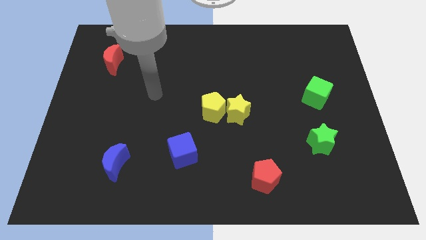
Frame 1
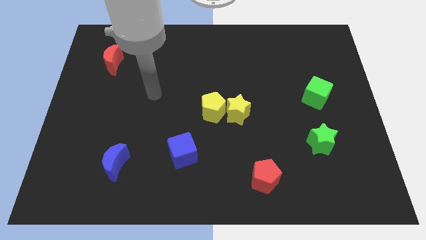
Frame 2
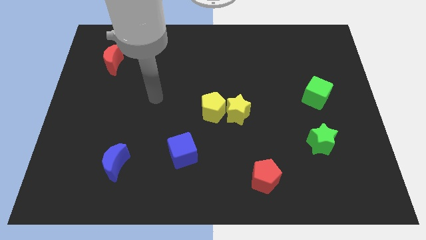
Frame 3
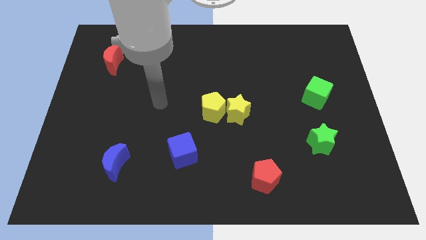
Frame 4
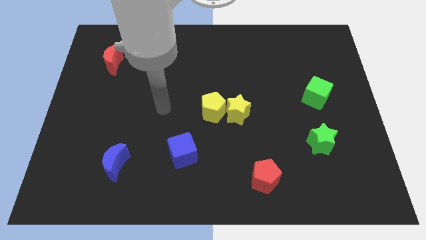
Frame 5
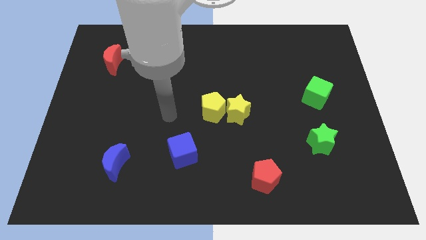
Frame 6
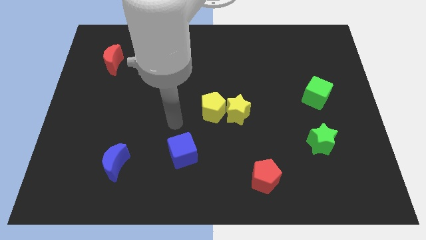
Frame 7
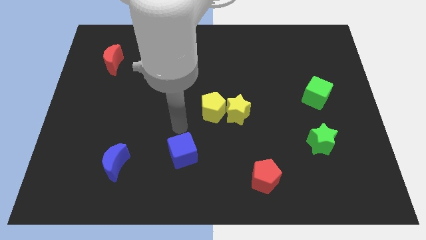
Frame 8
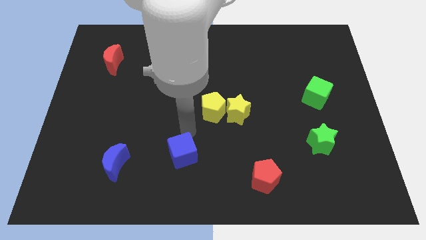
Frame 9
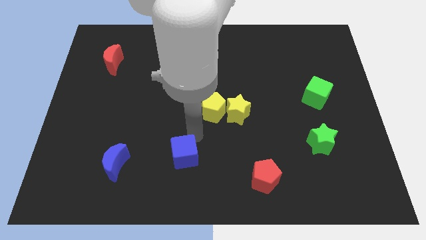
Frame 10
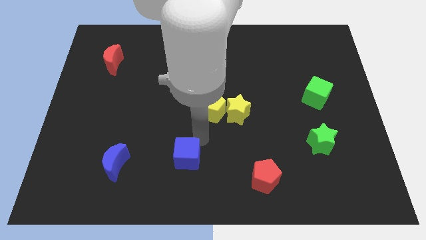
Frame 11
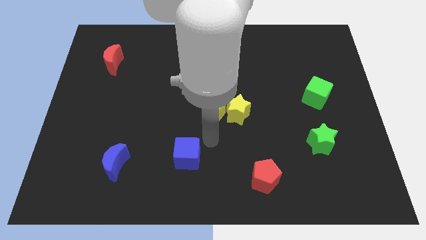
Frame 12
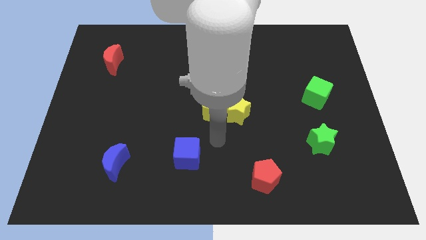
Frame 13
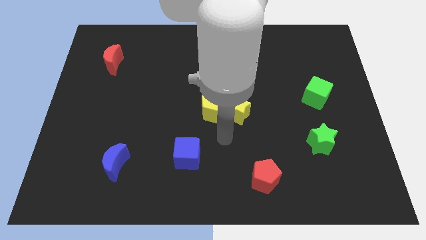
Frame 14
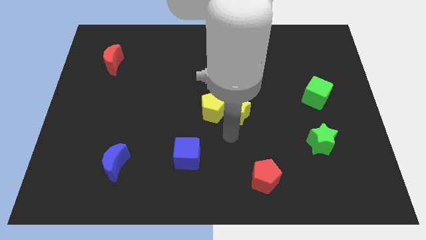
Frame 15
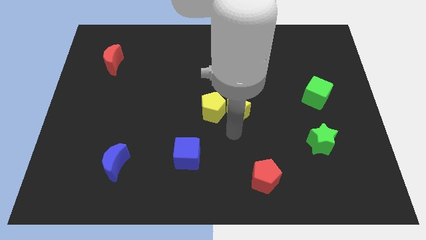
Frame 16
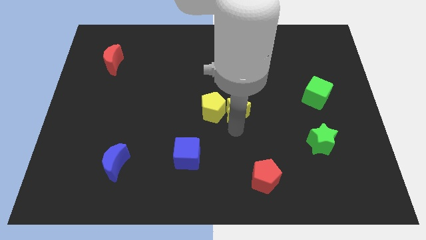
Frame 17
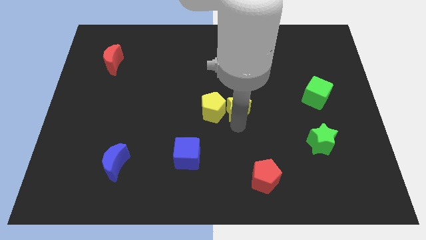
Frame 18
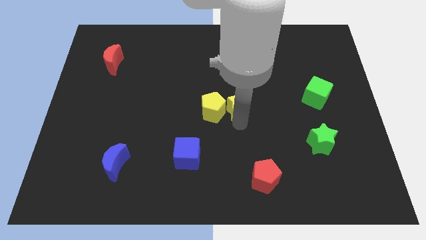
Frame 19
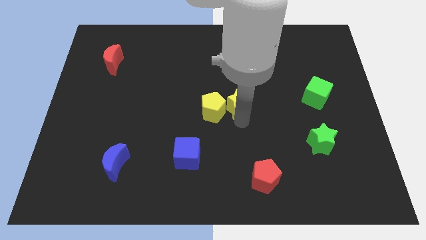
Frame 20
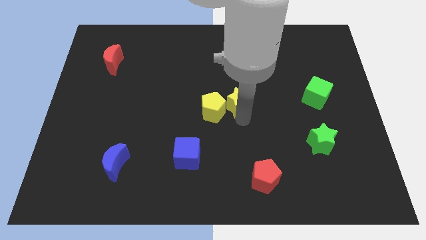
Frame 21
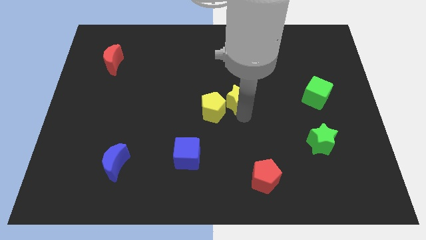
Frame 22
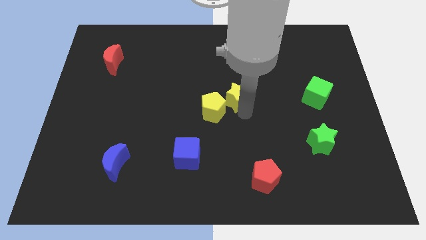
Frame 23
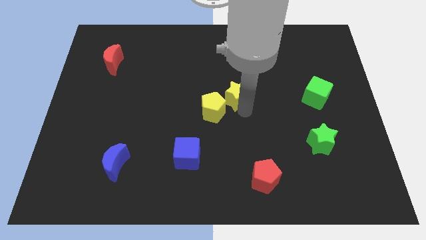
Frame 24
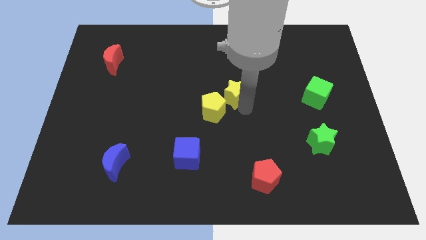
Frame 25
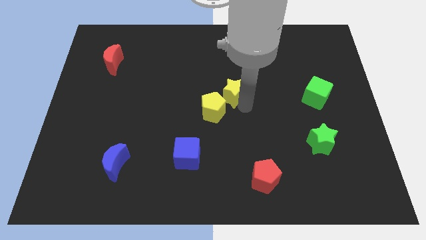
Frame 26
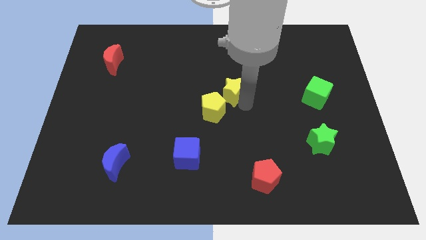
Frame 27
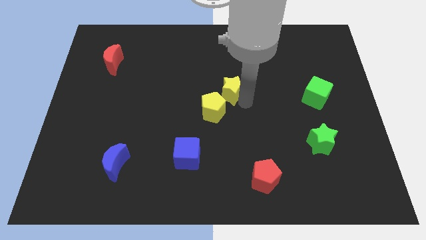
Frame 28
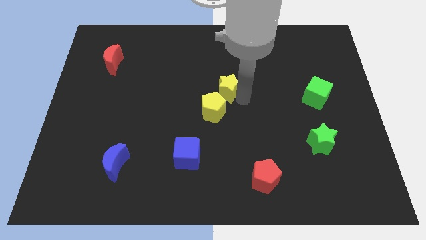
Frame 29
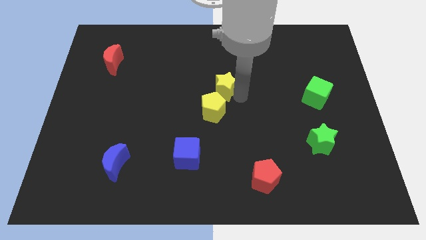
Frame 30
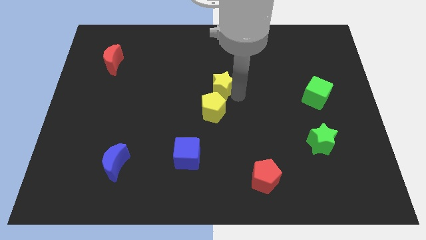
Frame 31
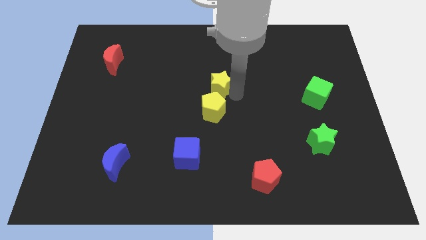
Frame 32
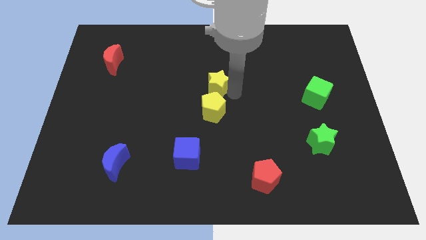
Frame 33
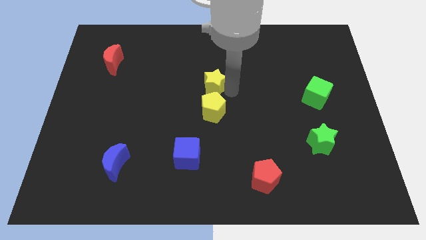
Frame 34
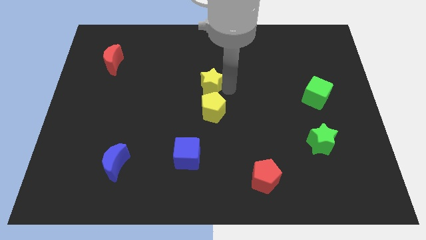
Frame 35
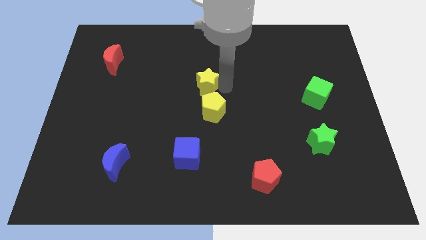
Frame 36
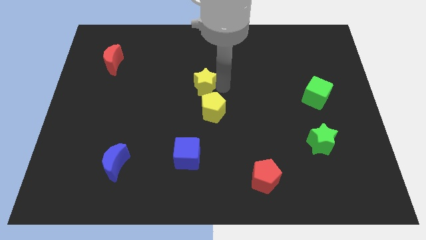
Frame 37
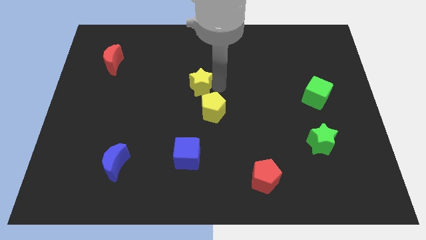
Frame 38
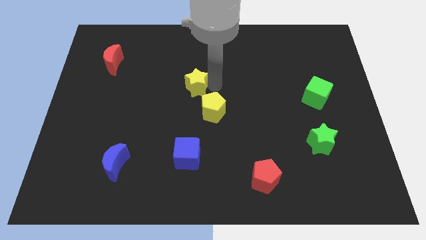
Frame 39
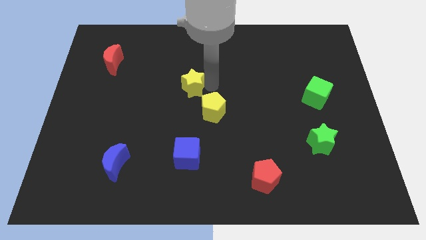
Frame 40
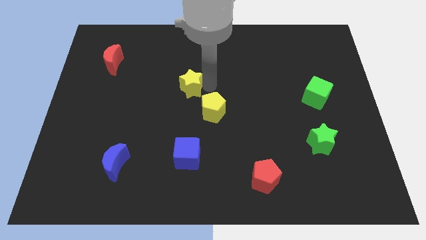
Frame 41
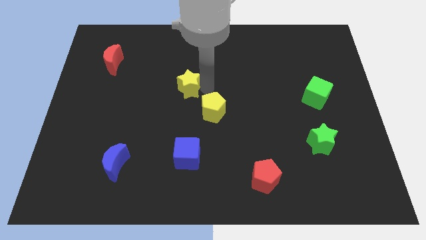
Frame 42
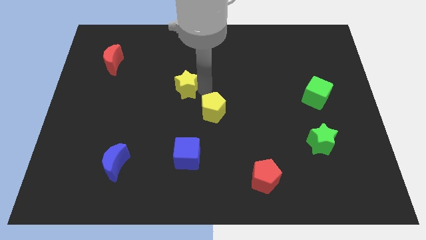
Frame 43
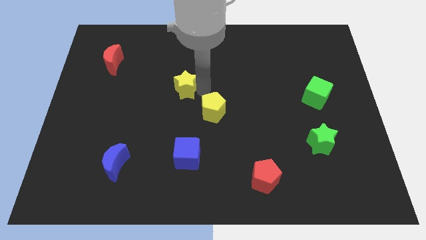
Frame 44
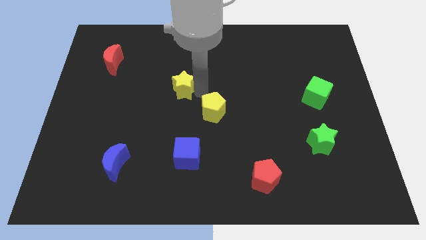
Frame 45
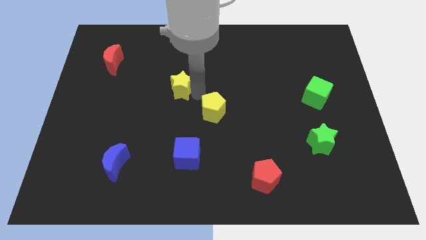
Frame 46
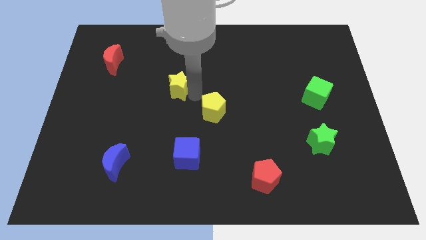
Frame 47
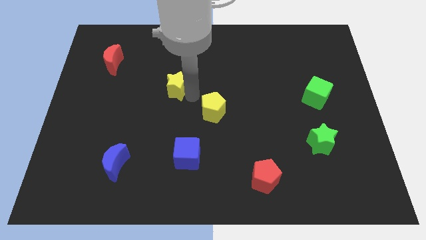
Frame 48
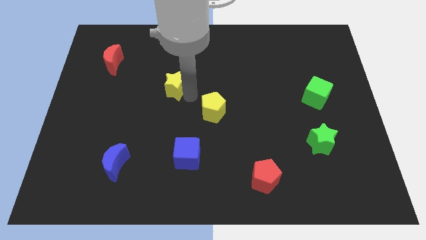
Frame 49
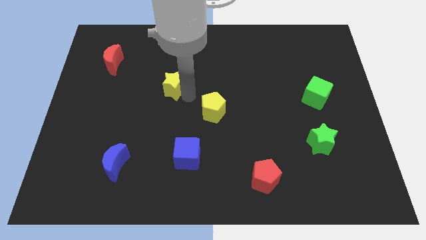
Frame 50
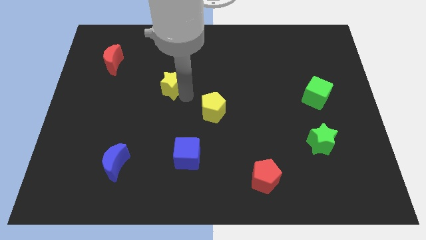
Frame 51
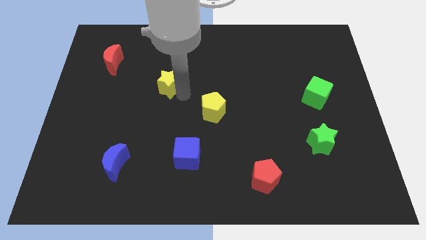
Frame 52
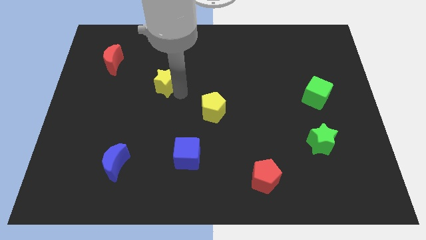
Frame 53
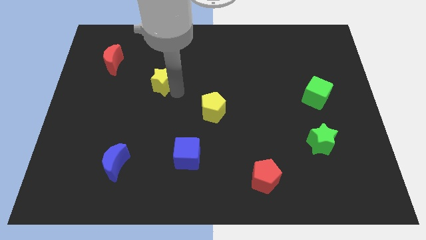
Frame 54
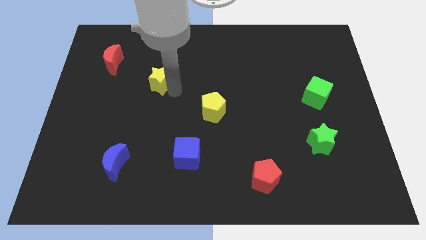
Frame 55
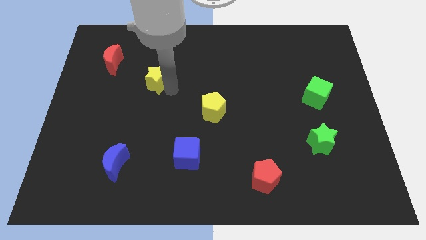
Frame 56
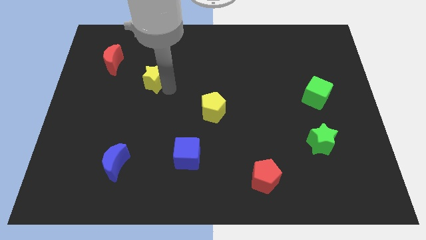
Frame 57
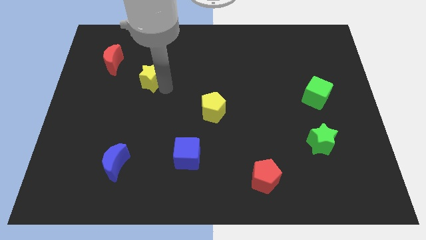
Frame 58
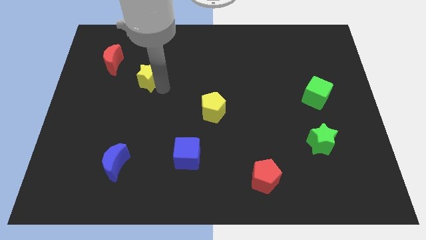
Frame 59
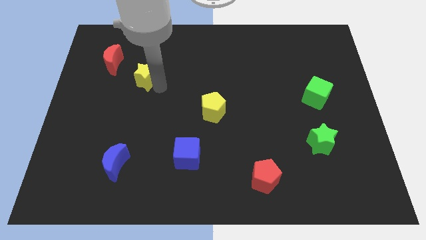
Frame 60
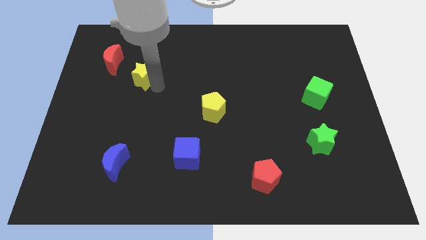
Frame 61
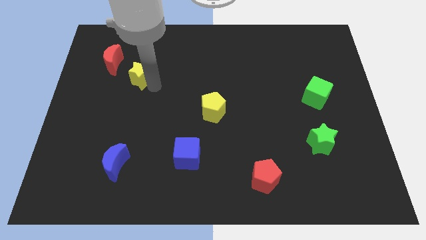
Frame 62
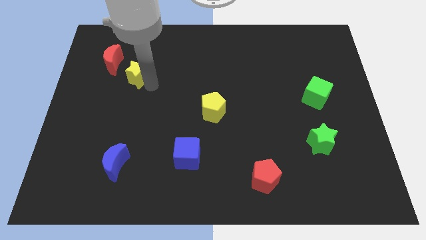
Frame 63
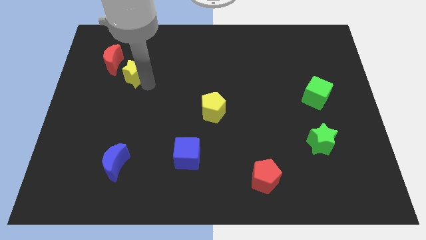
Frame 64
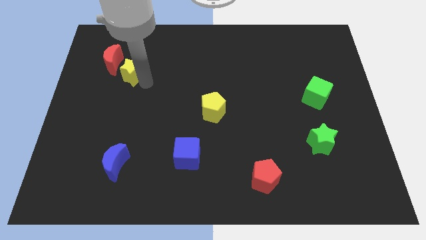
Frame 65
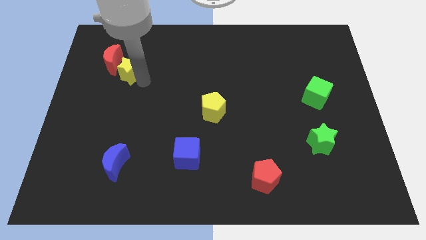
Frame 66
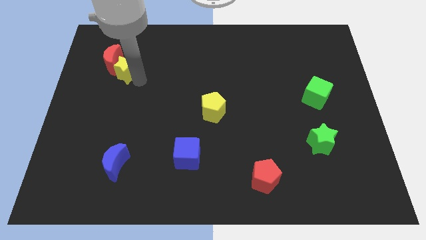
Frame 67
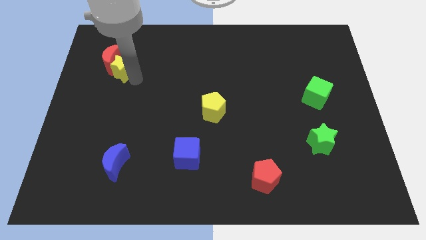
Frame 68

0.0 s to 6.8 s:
move the yellow star to the red moon

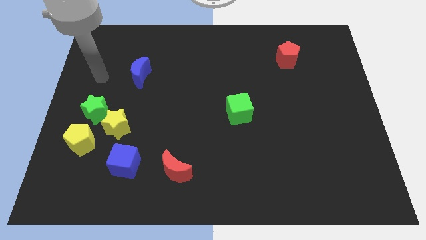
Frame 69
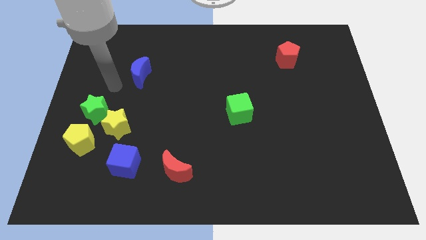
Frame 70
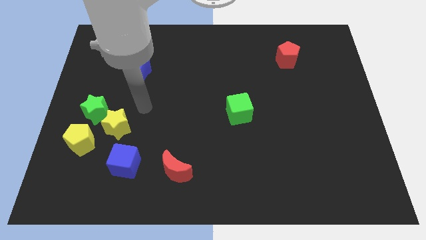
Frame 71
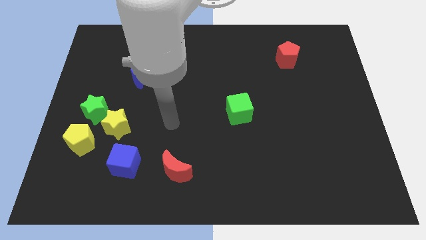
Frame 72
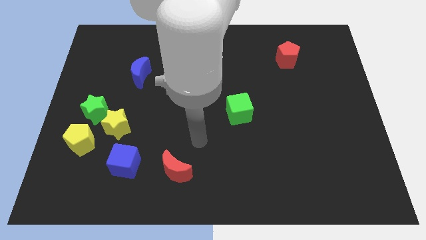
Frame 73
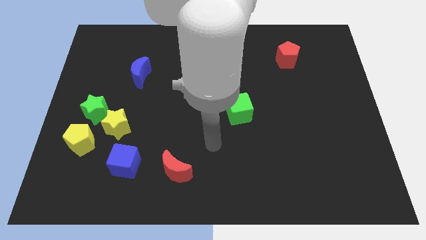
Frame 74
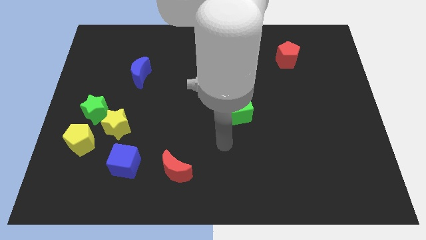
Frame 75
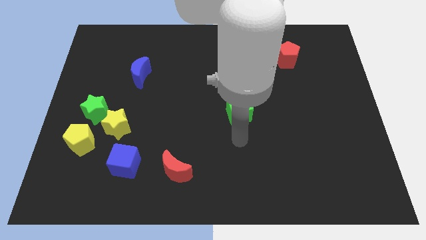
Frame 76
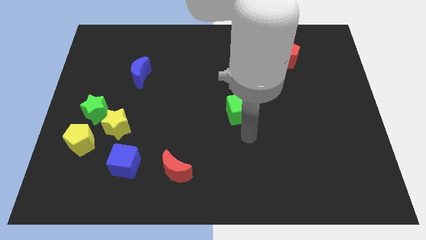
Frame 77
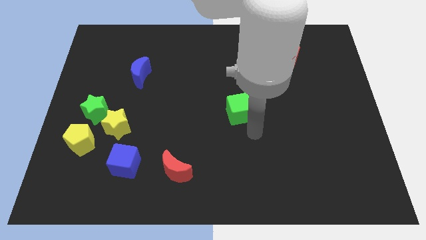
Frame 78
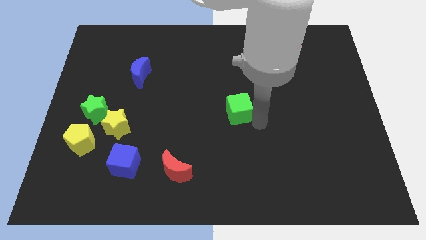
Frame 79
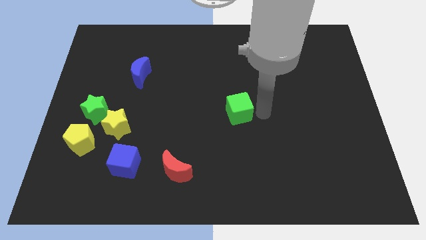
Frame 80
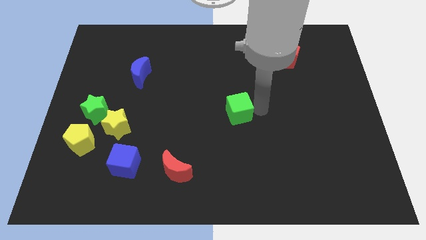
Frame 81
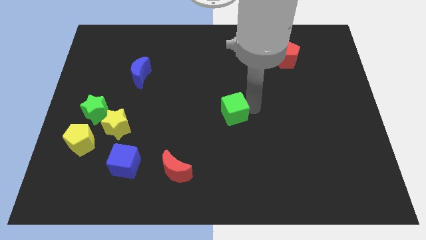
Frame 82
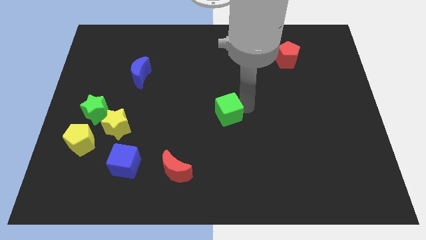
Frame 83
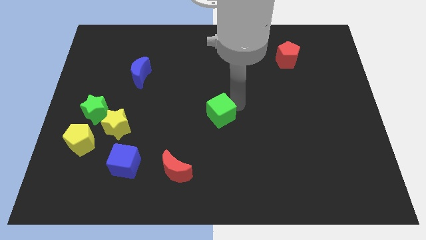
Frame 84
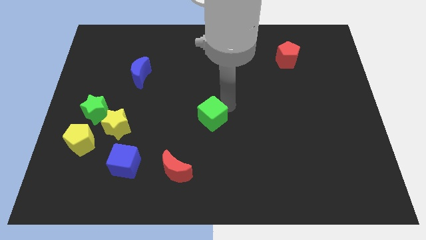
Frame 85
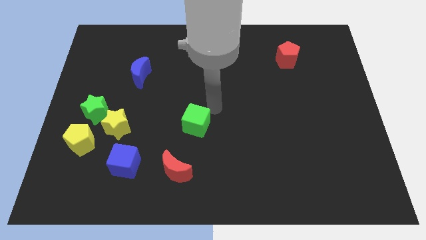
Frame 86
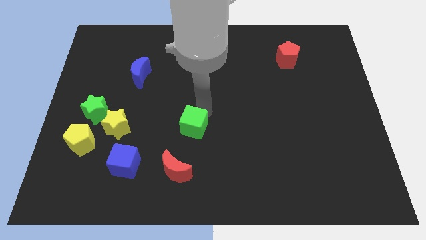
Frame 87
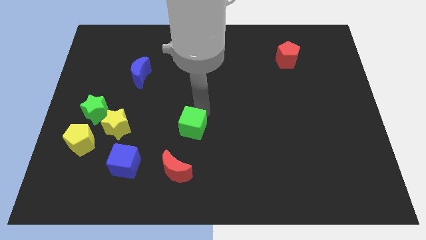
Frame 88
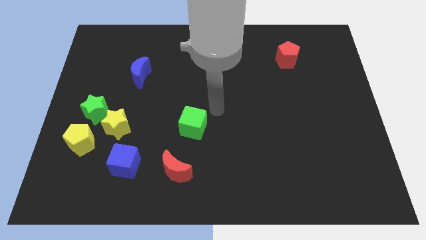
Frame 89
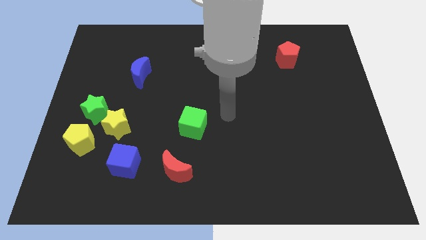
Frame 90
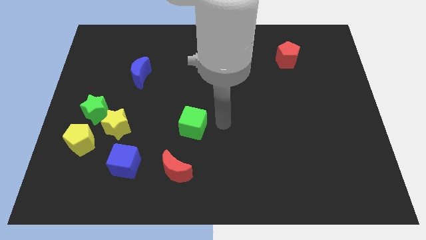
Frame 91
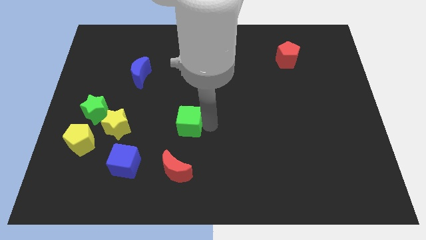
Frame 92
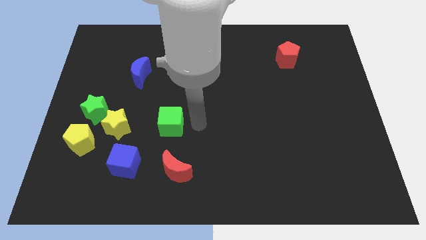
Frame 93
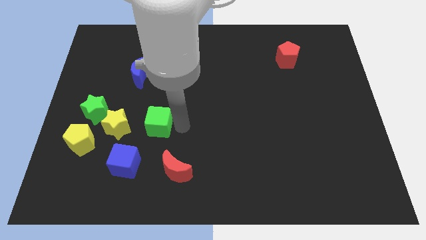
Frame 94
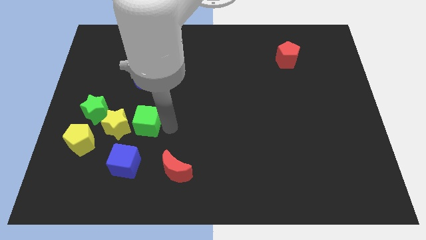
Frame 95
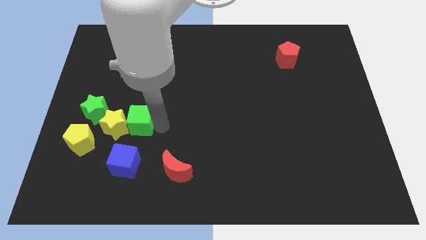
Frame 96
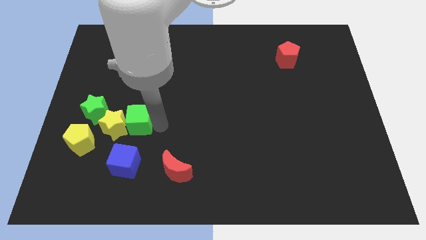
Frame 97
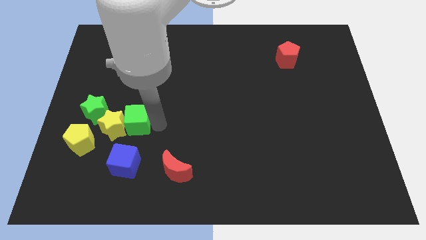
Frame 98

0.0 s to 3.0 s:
slide the green cube to the yellow star
